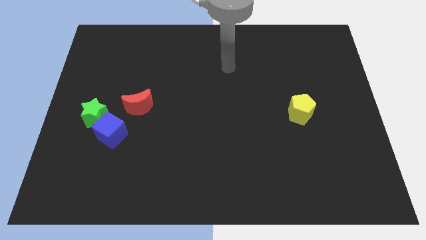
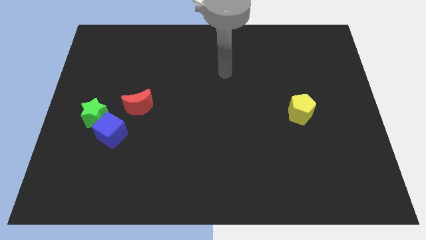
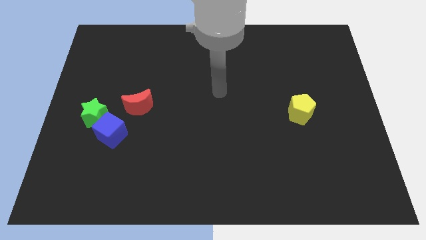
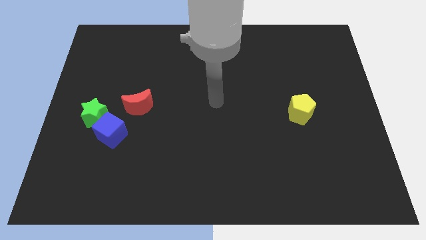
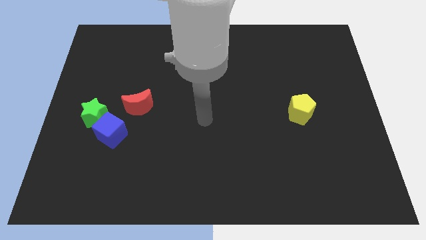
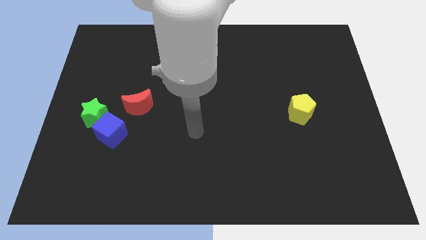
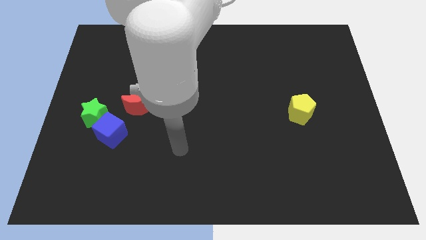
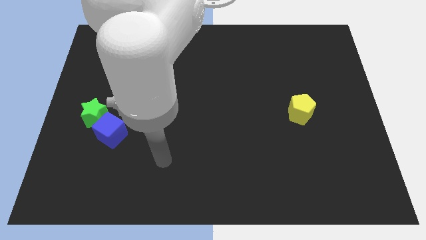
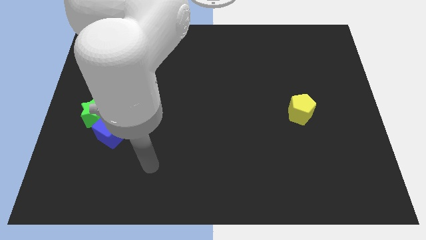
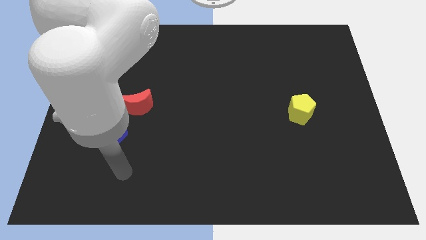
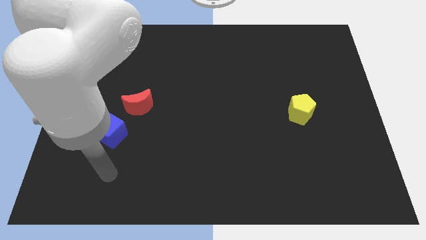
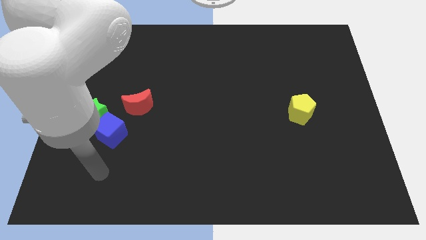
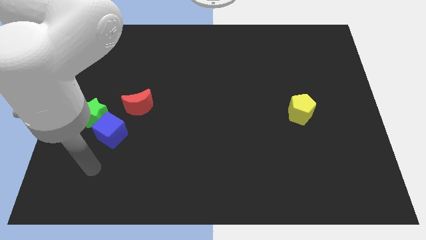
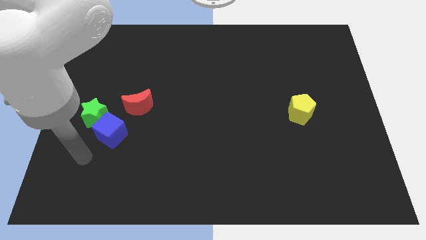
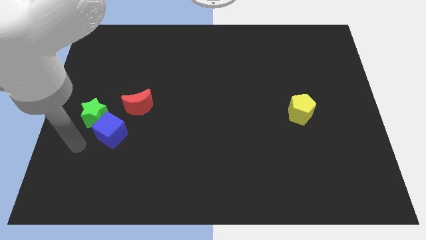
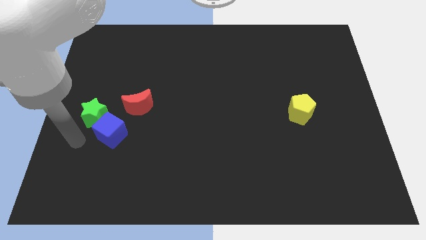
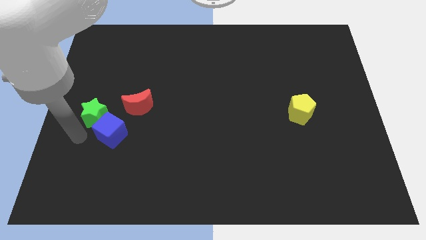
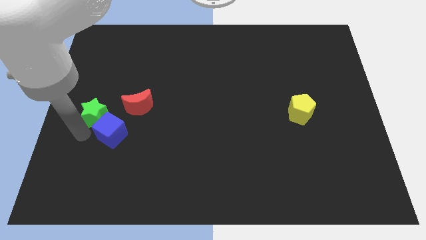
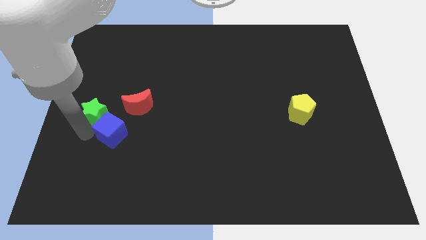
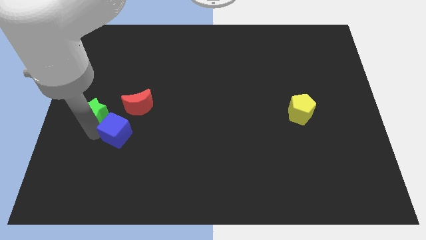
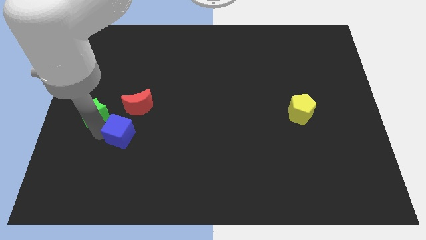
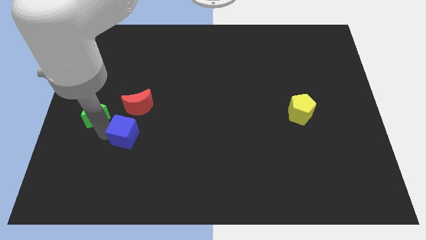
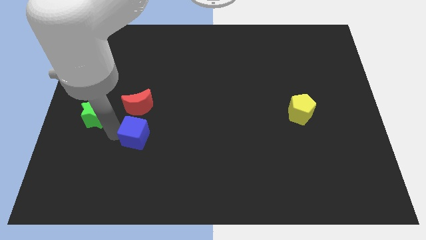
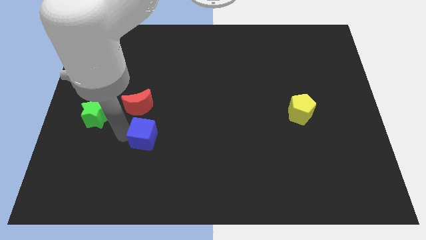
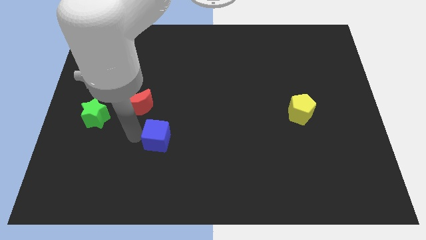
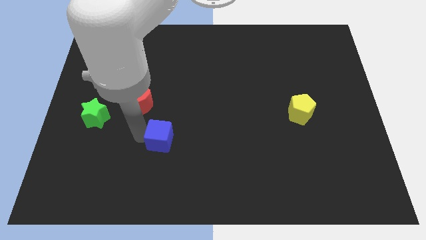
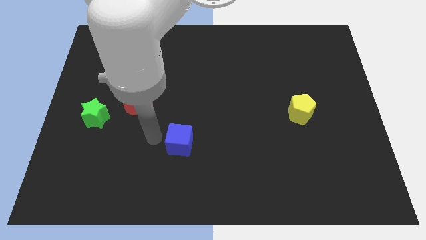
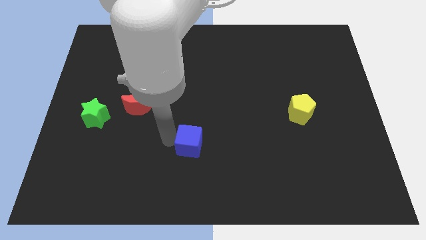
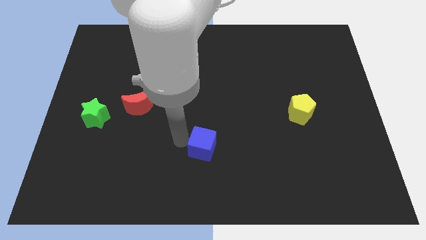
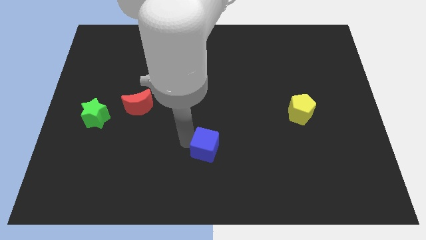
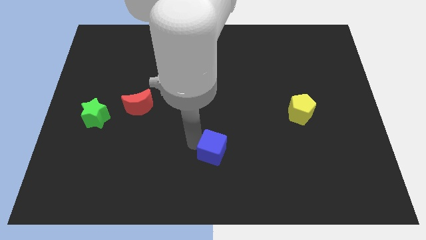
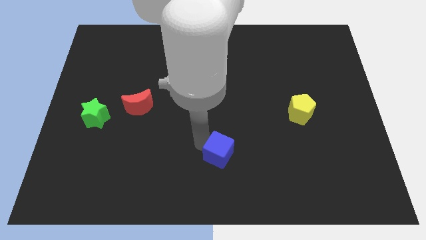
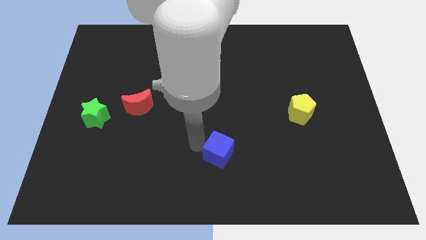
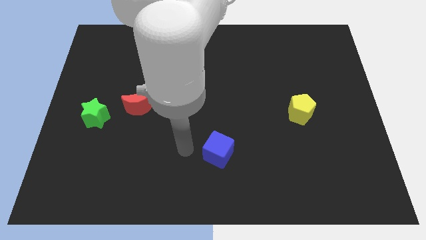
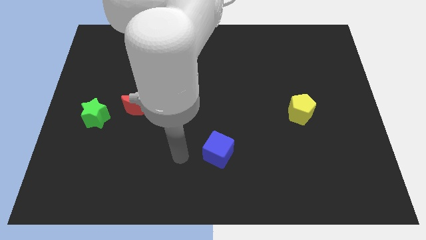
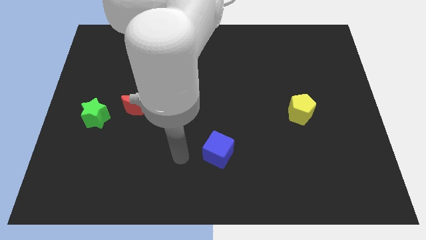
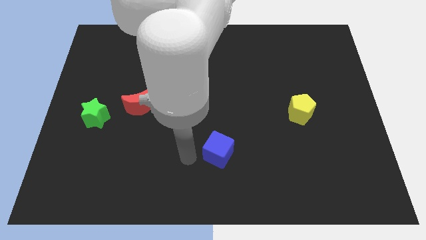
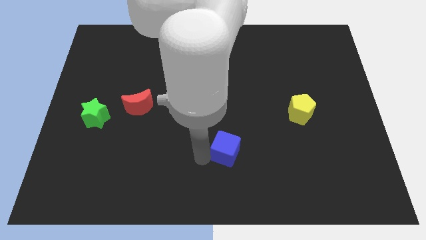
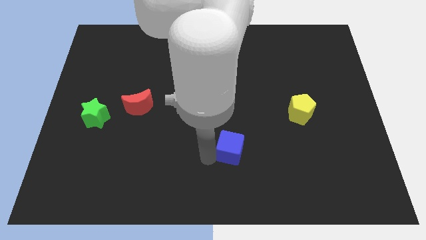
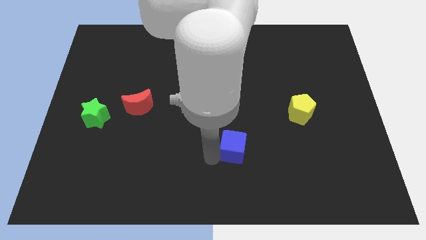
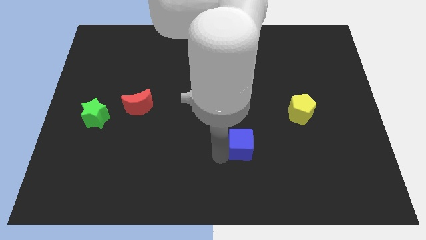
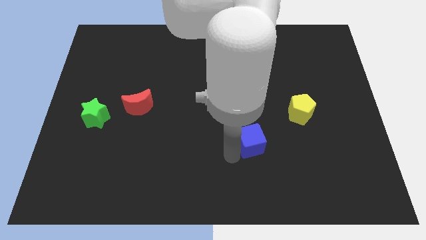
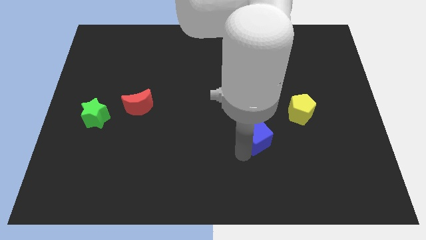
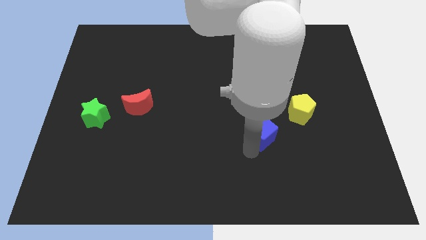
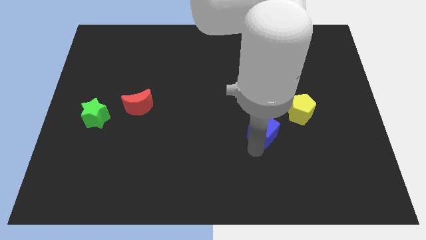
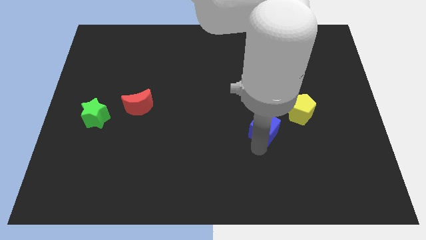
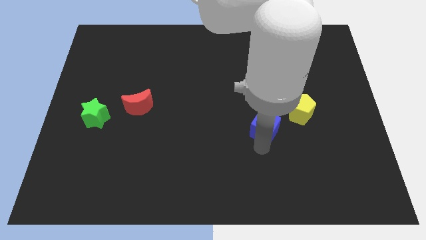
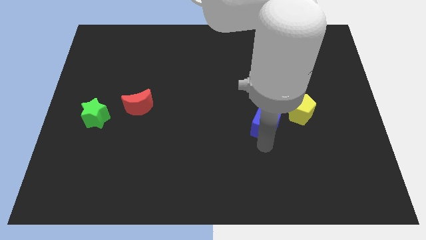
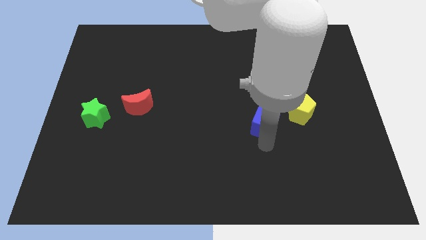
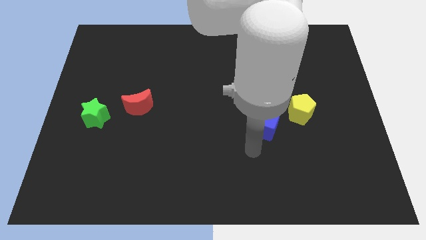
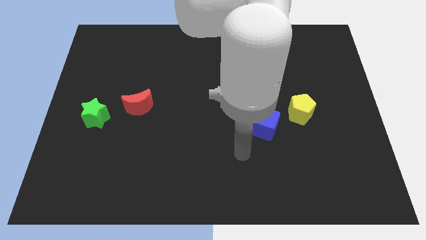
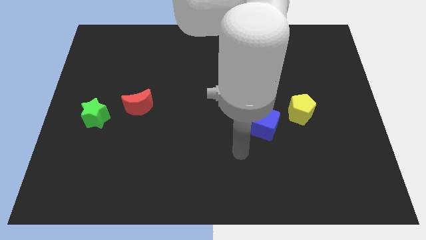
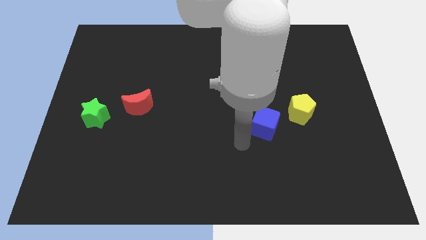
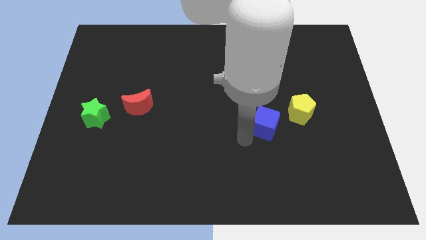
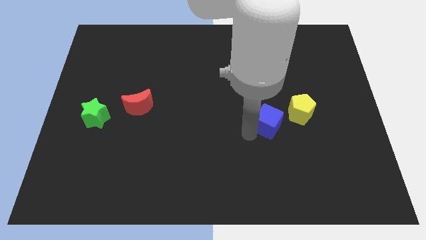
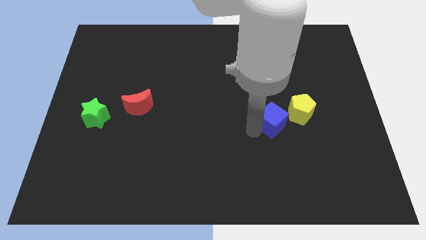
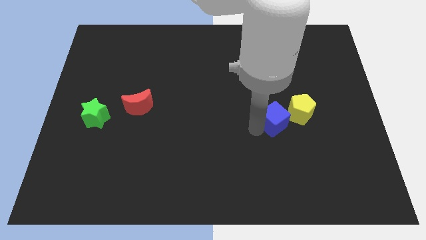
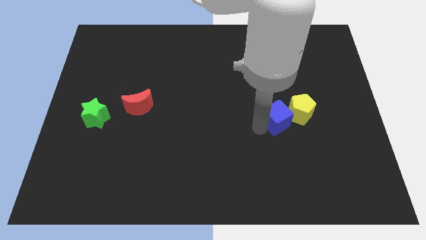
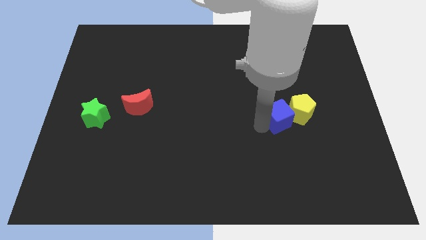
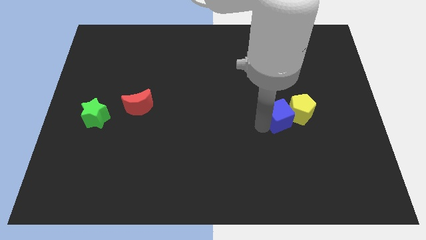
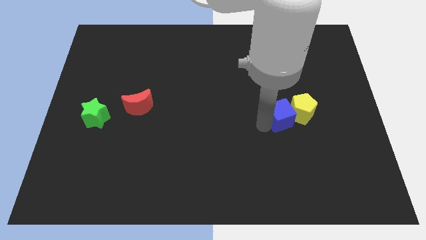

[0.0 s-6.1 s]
put the blue cube towards the yellow pentagon

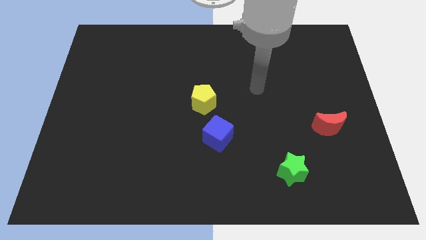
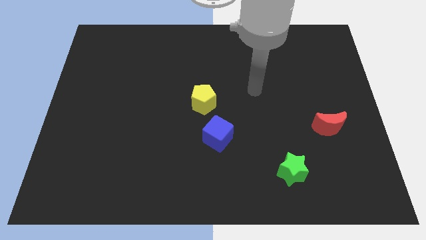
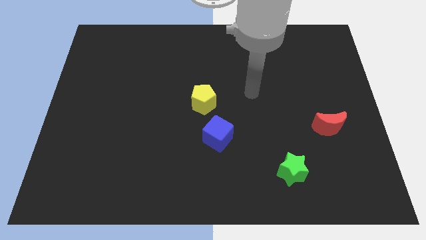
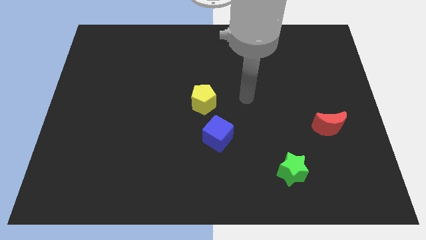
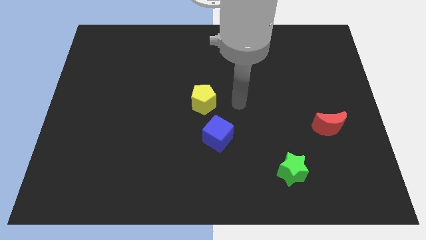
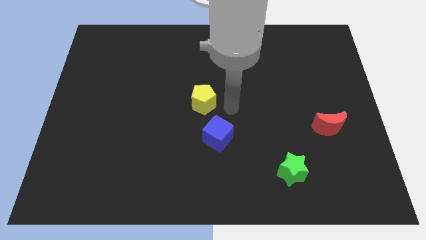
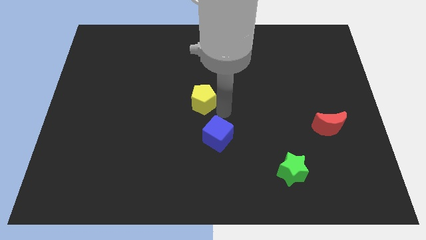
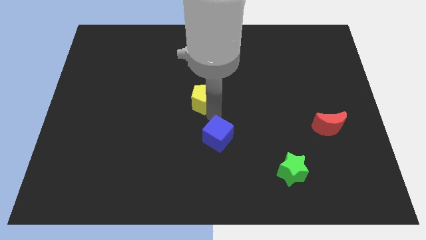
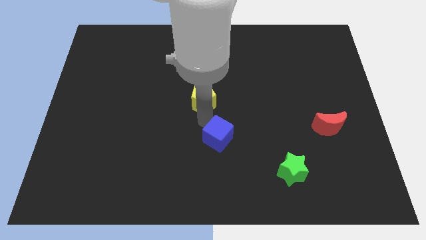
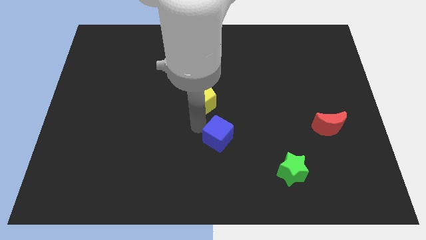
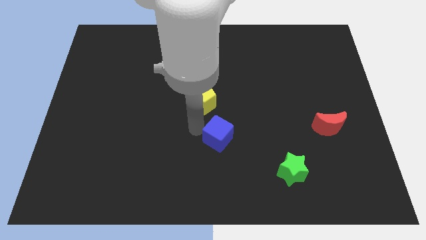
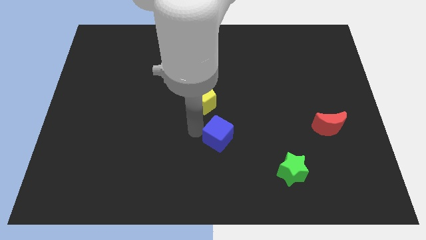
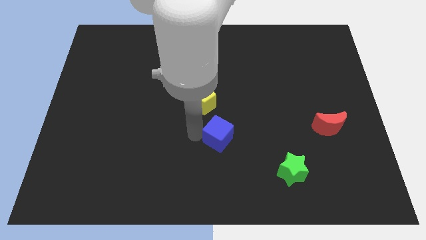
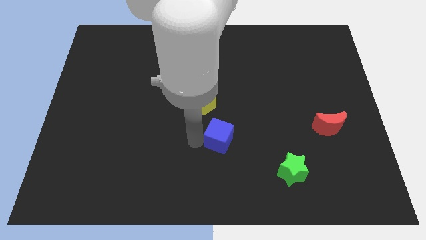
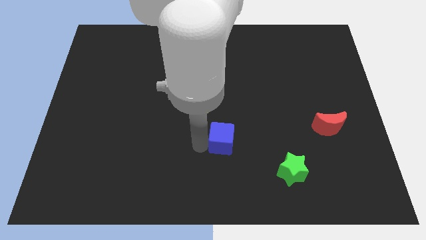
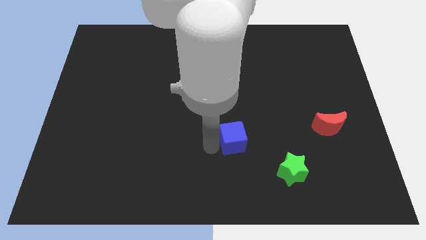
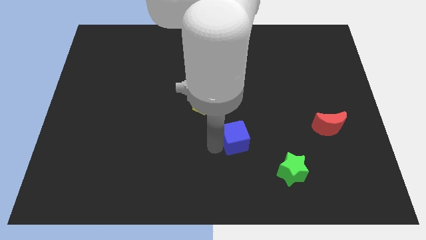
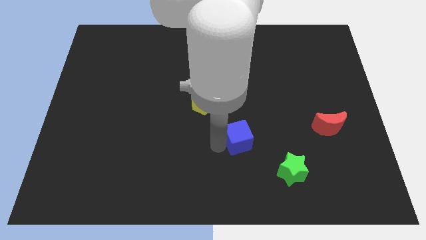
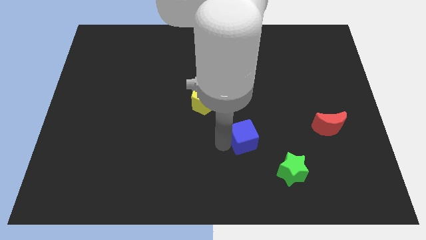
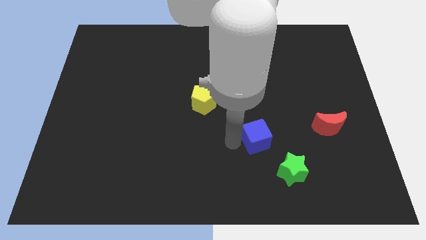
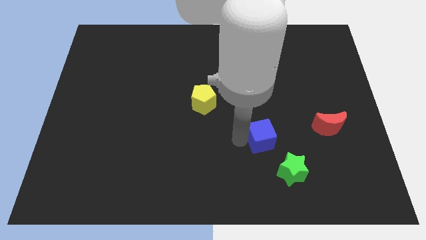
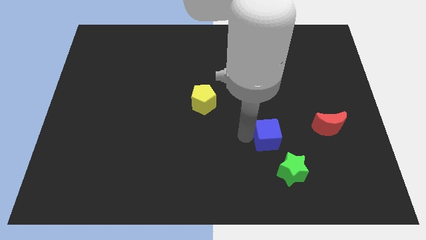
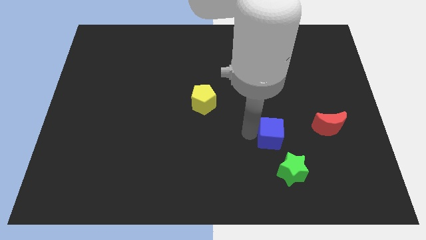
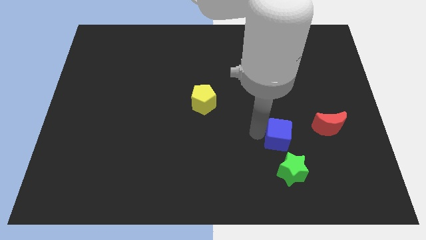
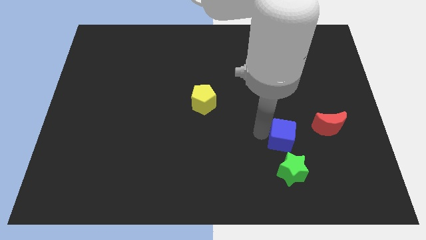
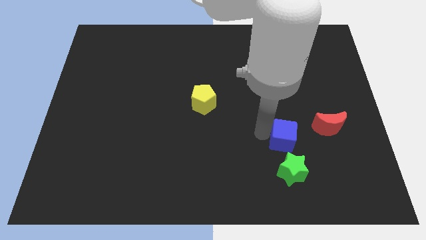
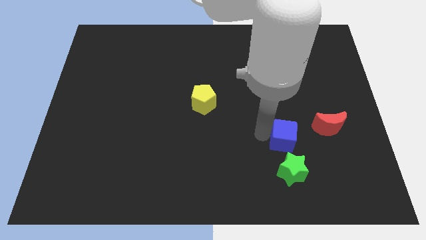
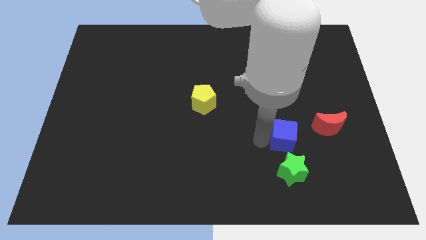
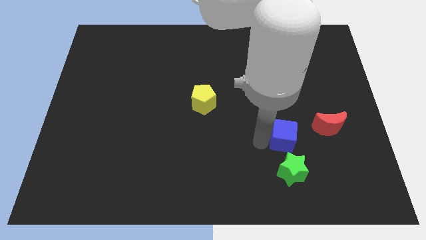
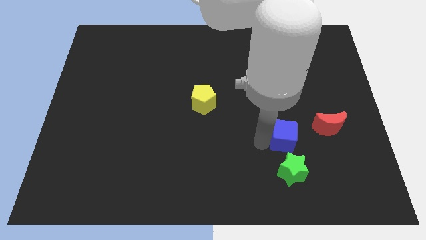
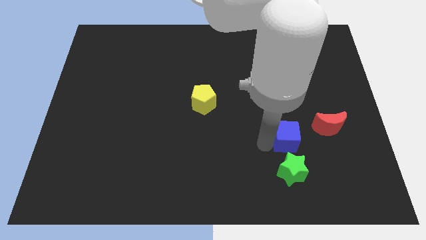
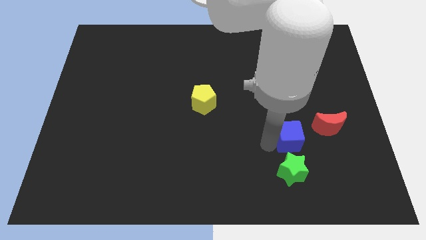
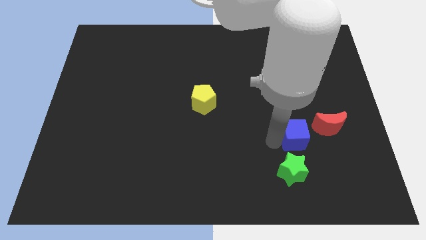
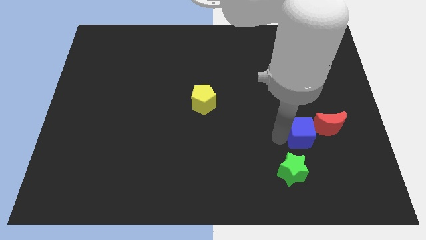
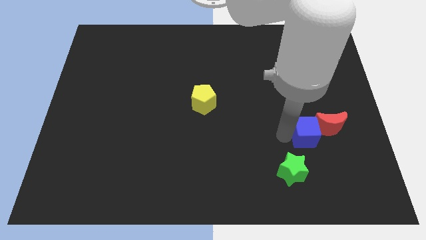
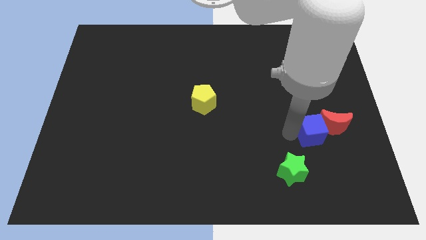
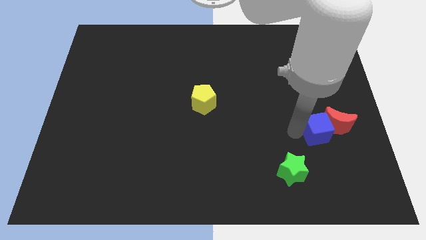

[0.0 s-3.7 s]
slide the cube next to the moon
